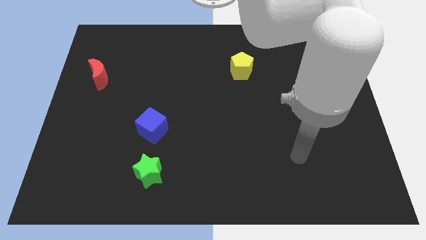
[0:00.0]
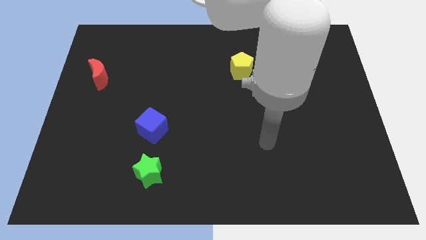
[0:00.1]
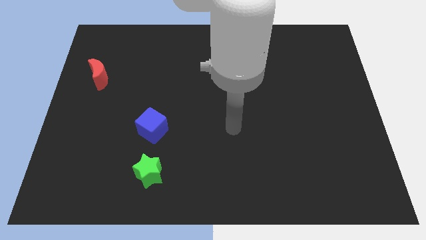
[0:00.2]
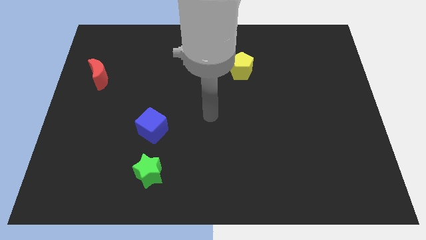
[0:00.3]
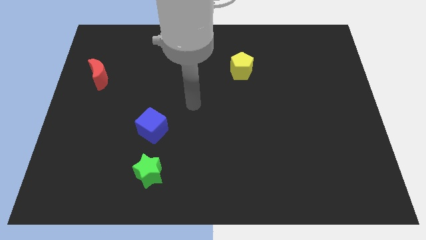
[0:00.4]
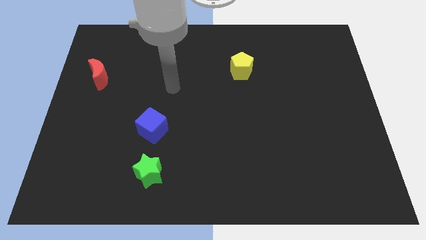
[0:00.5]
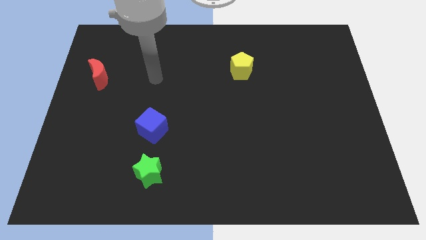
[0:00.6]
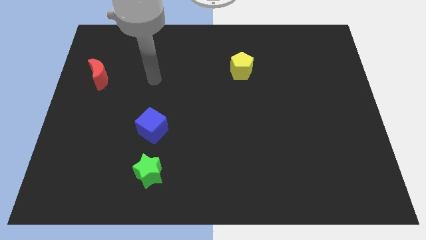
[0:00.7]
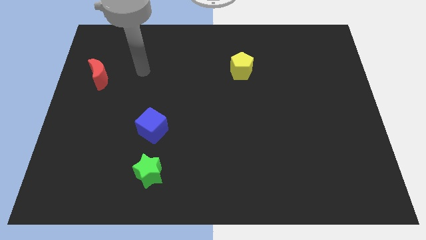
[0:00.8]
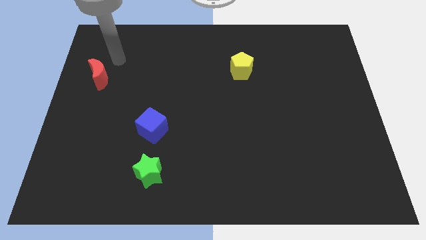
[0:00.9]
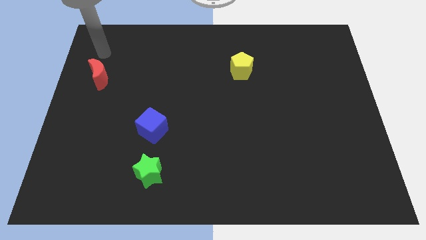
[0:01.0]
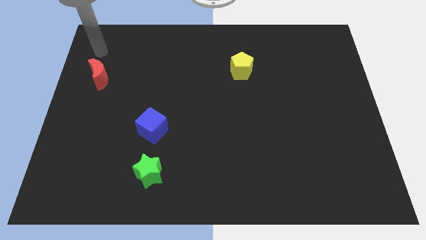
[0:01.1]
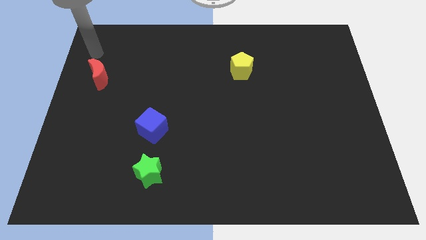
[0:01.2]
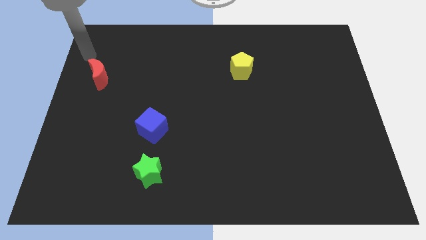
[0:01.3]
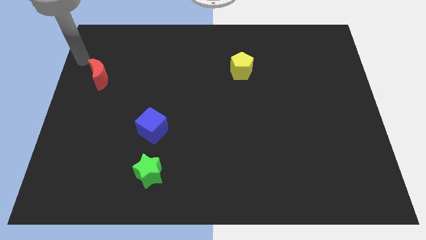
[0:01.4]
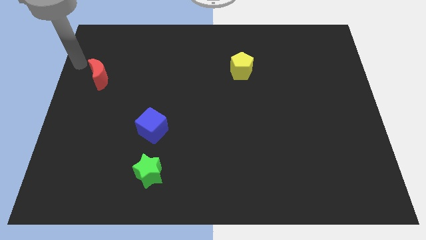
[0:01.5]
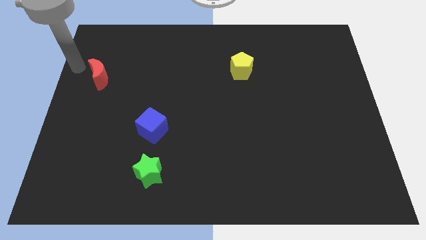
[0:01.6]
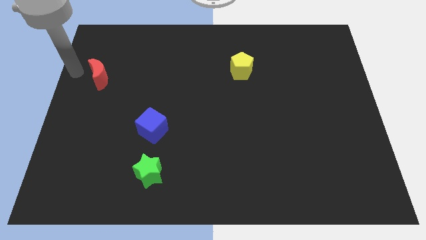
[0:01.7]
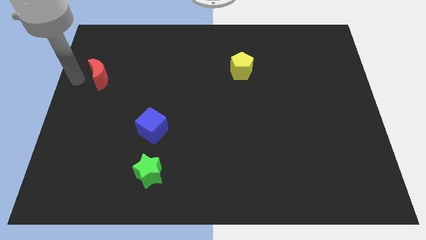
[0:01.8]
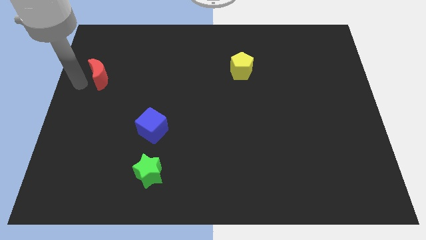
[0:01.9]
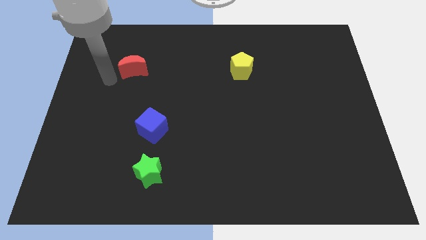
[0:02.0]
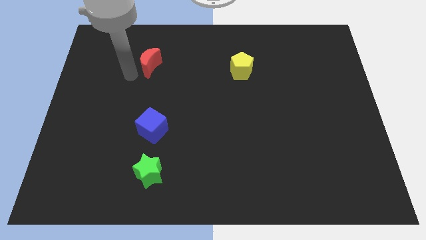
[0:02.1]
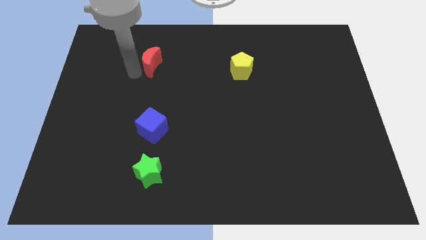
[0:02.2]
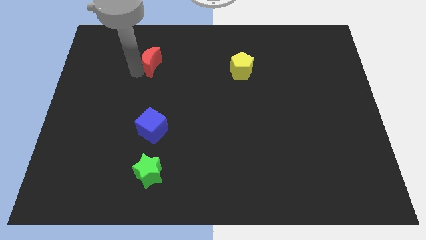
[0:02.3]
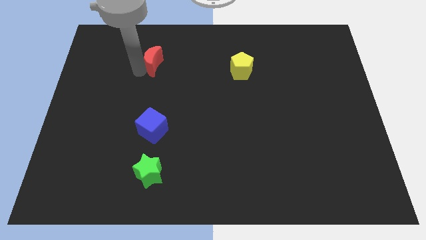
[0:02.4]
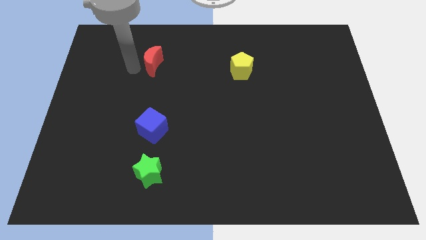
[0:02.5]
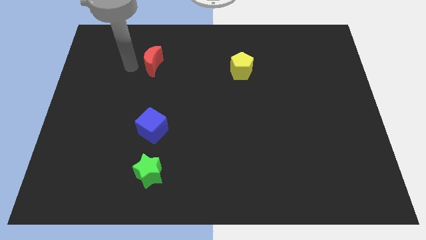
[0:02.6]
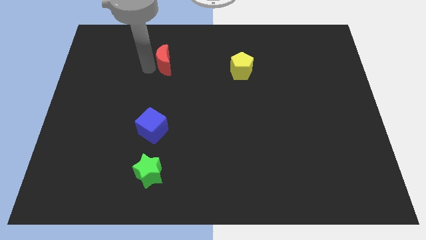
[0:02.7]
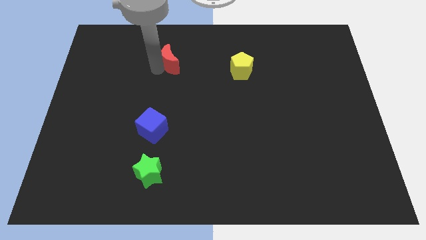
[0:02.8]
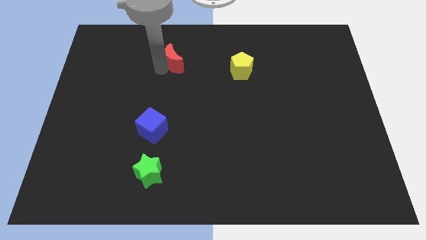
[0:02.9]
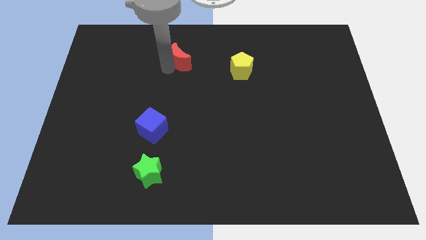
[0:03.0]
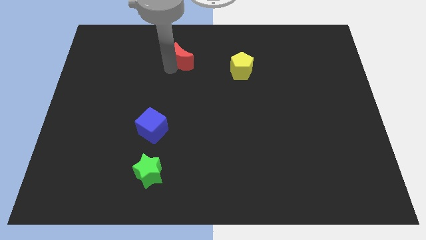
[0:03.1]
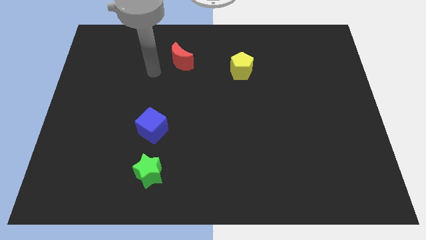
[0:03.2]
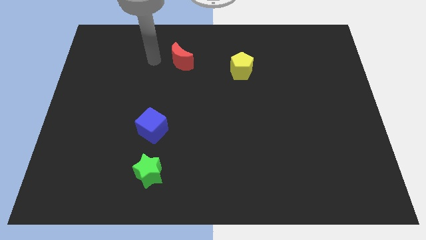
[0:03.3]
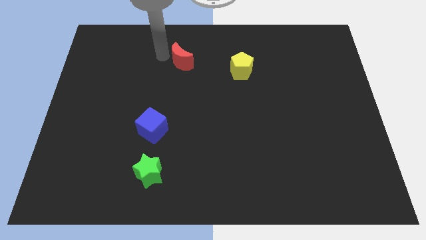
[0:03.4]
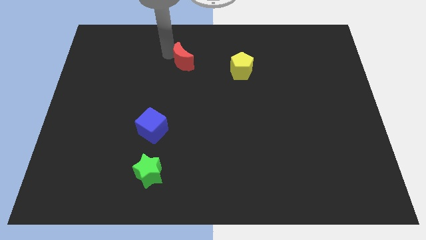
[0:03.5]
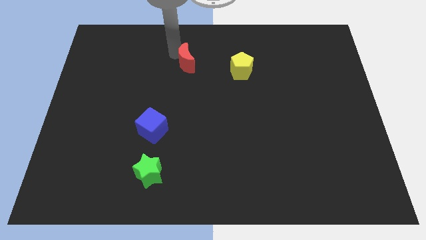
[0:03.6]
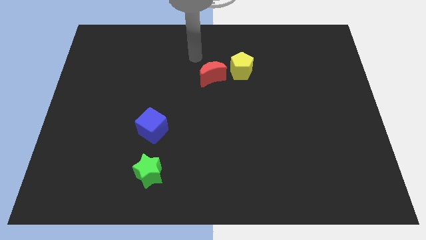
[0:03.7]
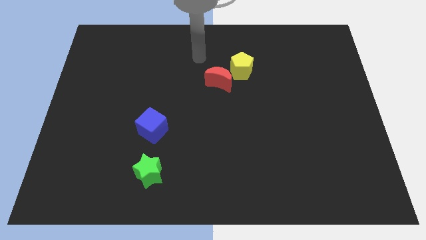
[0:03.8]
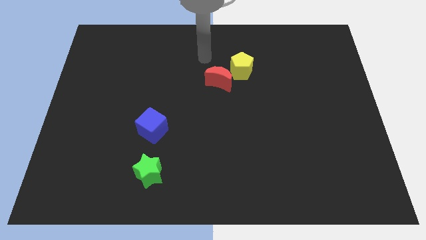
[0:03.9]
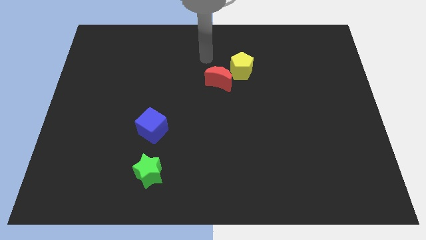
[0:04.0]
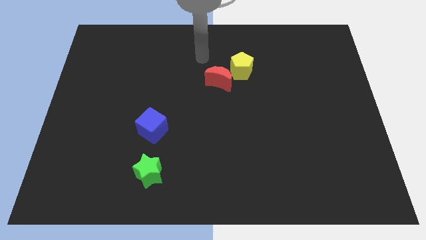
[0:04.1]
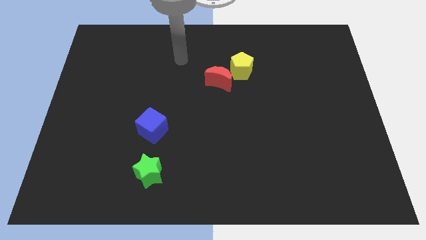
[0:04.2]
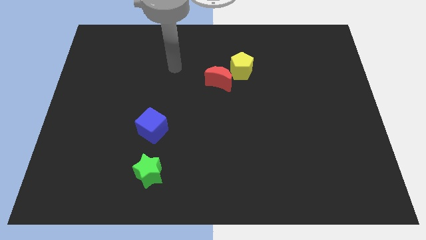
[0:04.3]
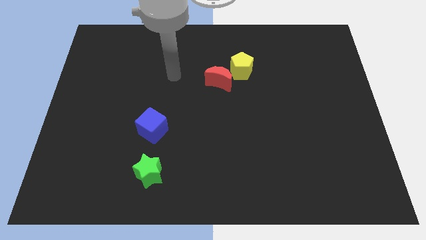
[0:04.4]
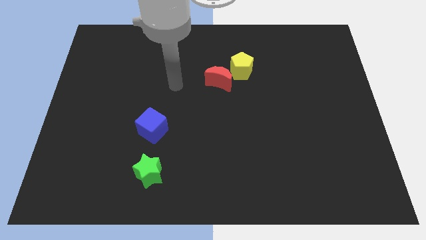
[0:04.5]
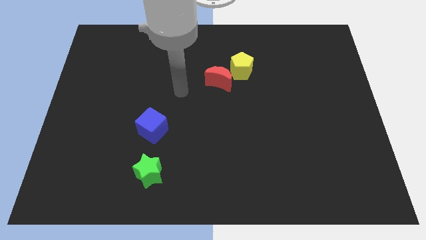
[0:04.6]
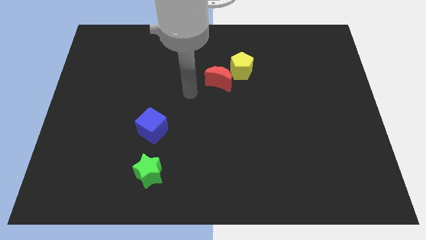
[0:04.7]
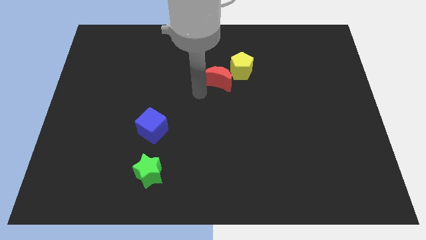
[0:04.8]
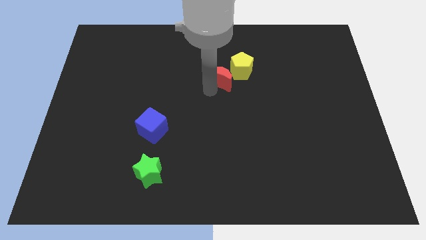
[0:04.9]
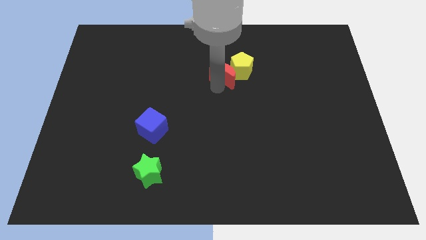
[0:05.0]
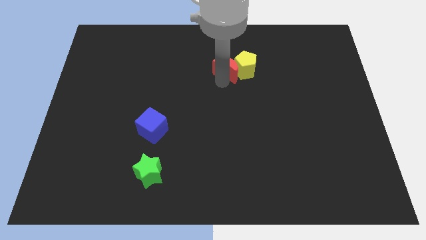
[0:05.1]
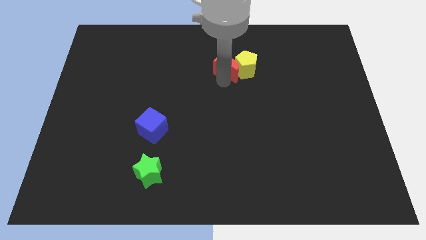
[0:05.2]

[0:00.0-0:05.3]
put the red block towards the yellow block

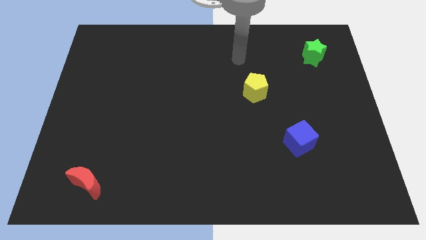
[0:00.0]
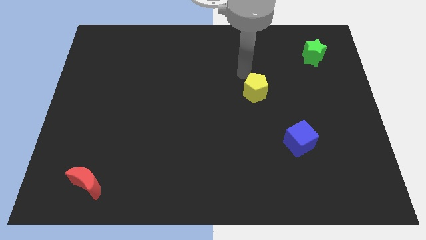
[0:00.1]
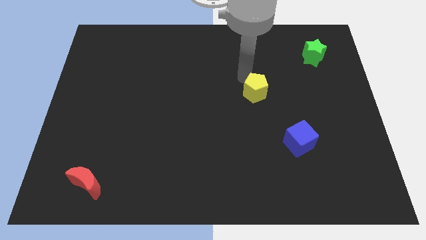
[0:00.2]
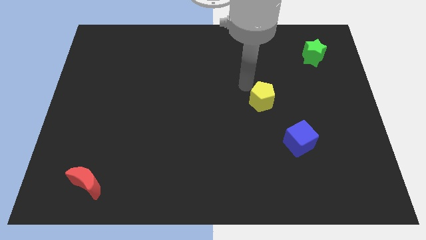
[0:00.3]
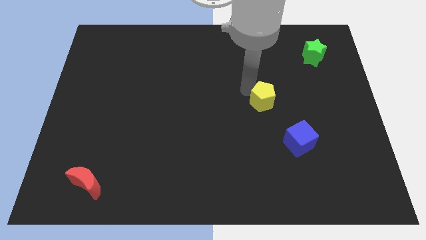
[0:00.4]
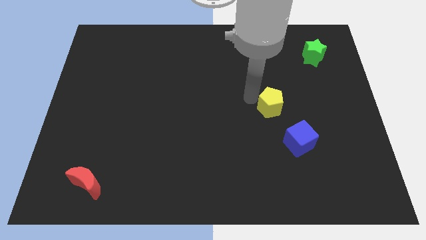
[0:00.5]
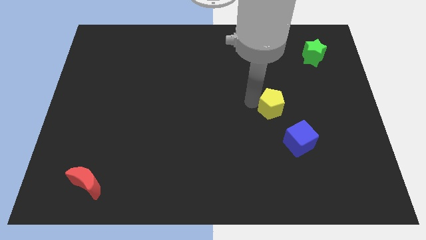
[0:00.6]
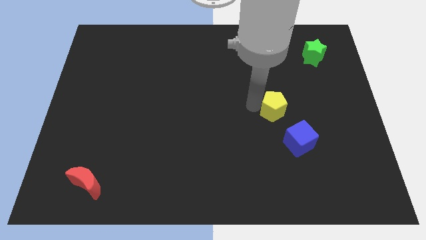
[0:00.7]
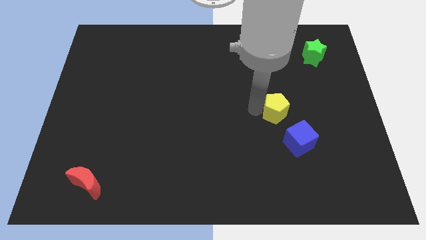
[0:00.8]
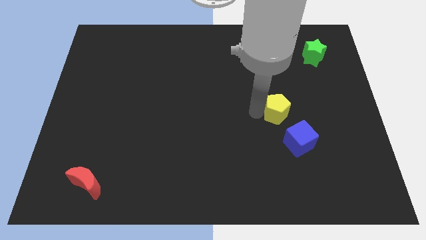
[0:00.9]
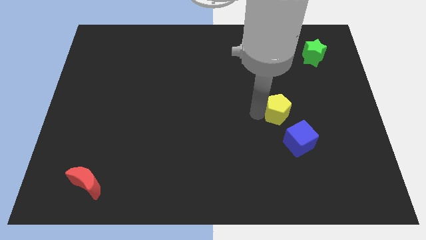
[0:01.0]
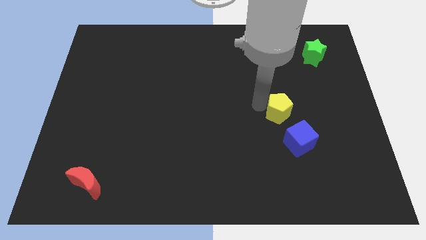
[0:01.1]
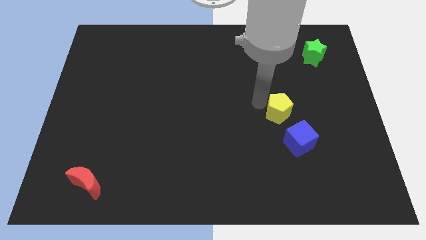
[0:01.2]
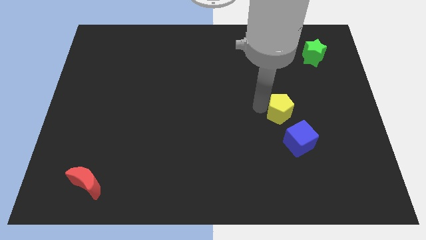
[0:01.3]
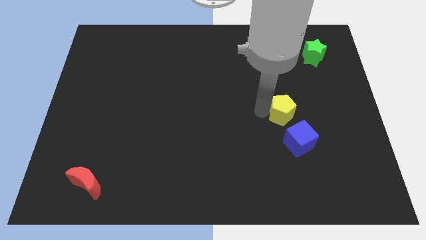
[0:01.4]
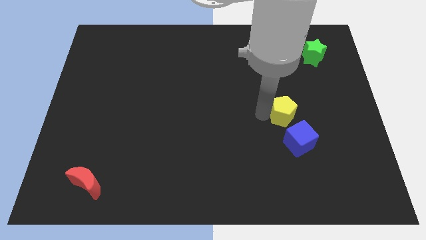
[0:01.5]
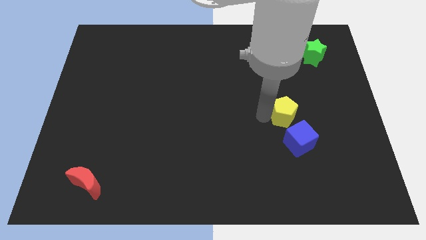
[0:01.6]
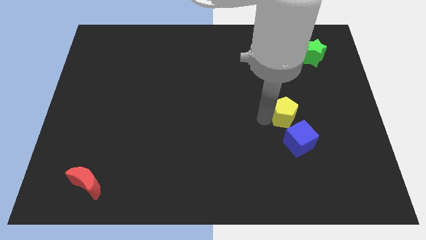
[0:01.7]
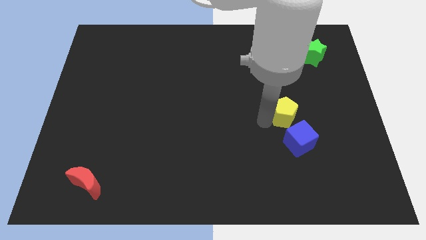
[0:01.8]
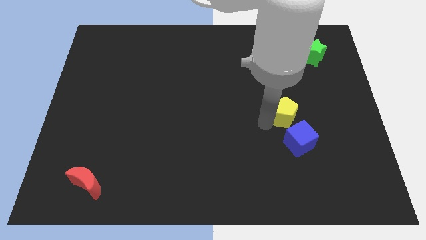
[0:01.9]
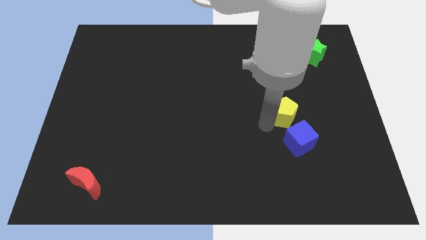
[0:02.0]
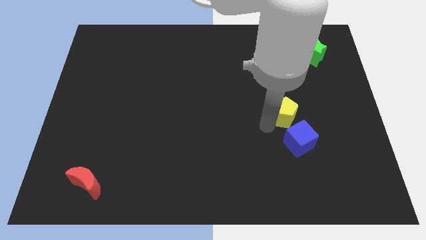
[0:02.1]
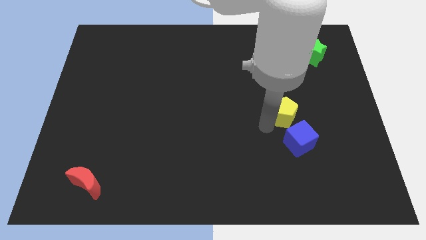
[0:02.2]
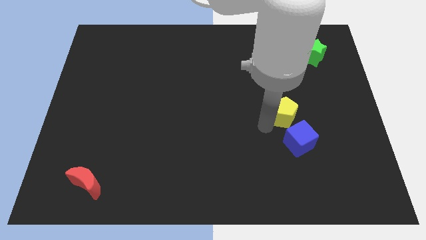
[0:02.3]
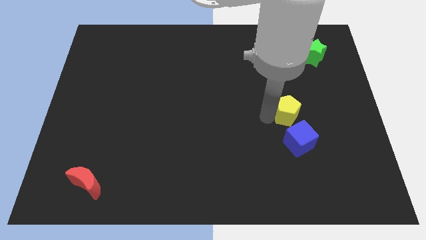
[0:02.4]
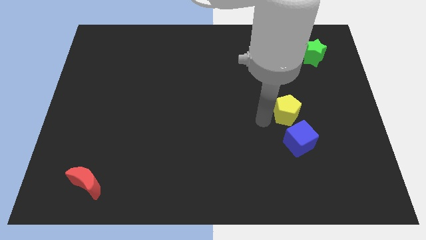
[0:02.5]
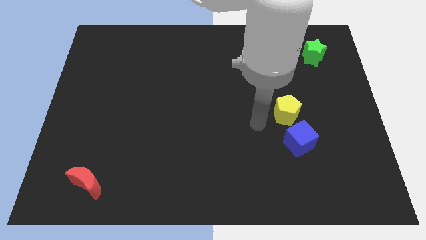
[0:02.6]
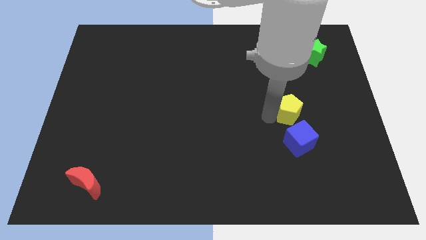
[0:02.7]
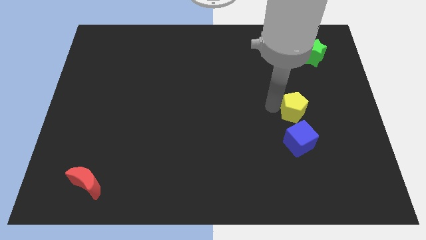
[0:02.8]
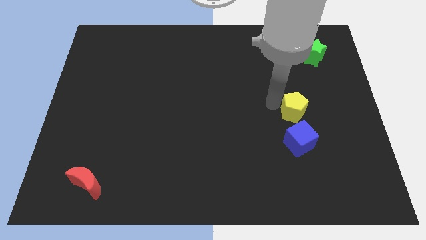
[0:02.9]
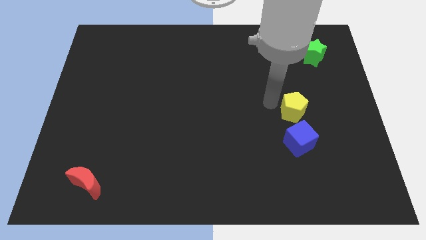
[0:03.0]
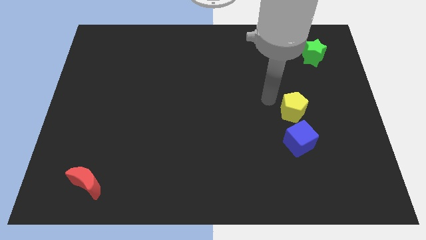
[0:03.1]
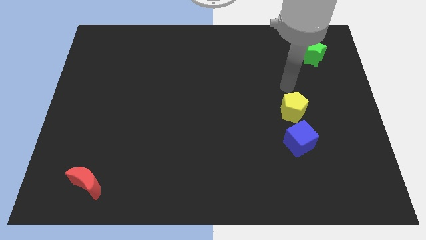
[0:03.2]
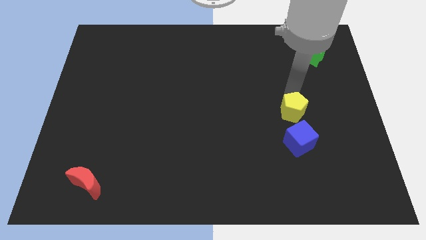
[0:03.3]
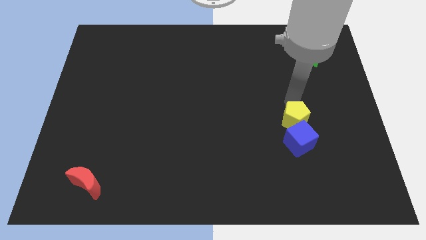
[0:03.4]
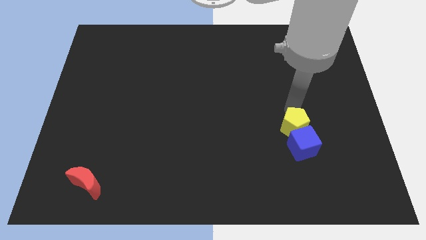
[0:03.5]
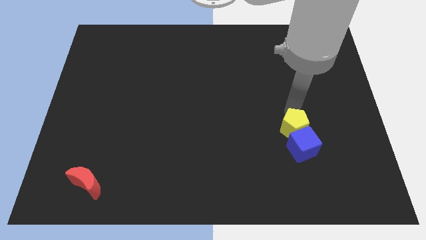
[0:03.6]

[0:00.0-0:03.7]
push the yellow block next to the blue cube
